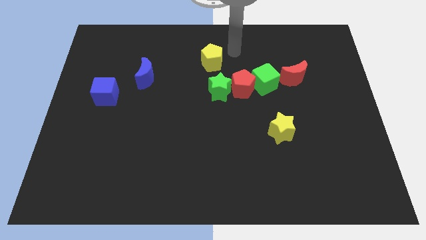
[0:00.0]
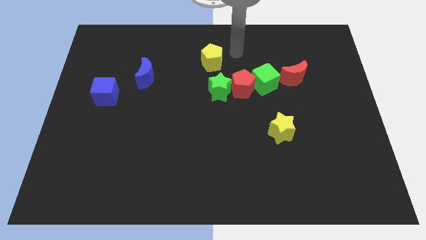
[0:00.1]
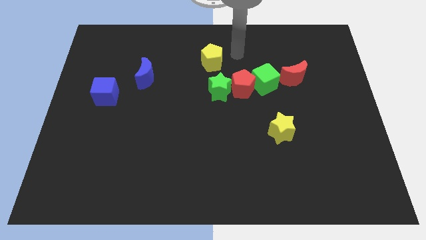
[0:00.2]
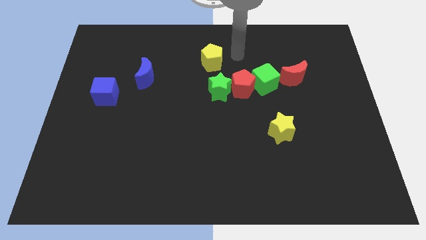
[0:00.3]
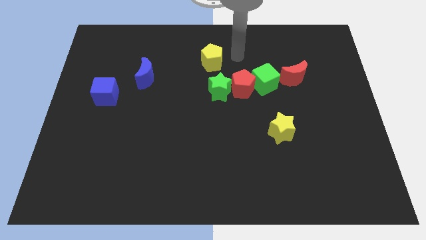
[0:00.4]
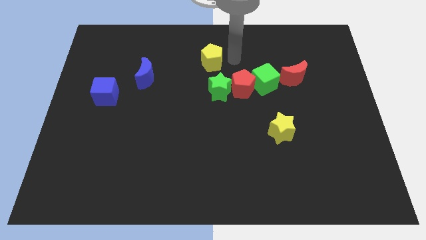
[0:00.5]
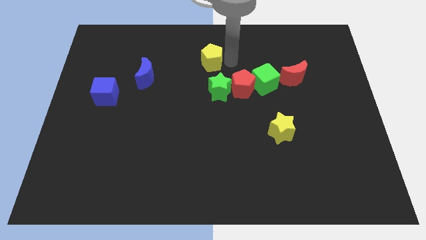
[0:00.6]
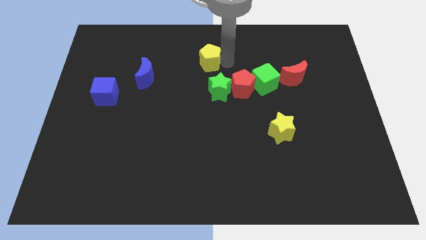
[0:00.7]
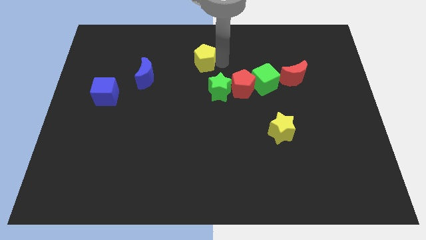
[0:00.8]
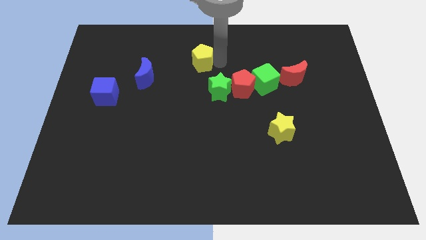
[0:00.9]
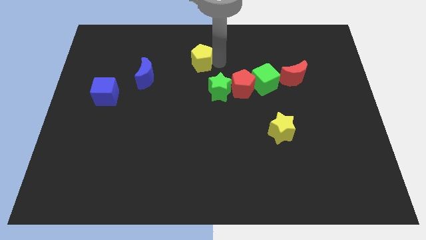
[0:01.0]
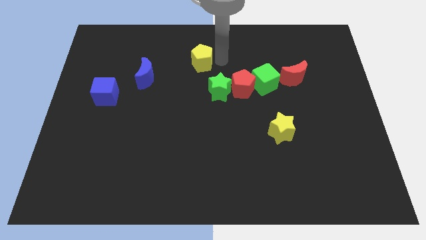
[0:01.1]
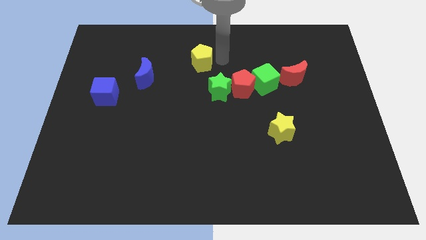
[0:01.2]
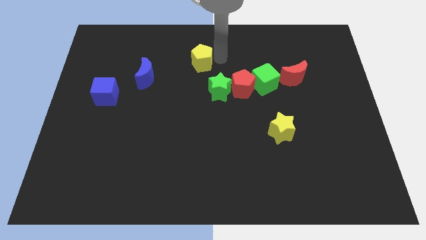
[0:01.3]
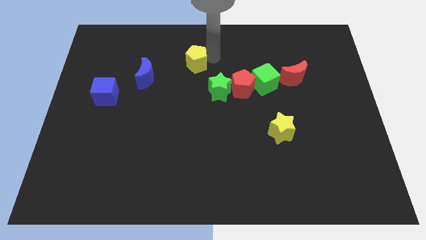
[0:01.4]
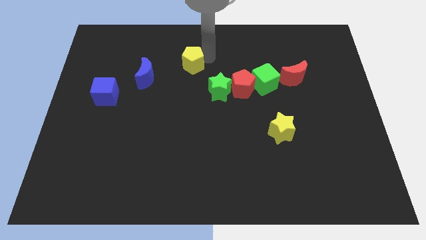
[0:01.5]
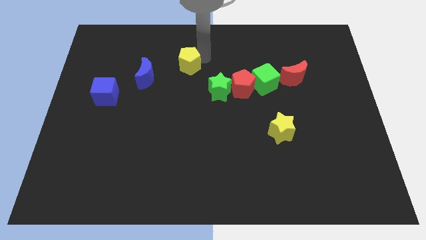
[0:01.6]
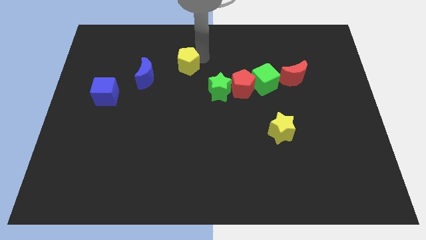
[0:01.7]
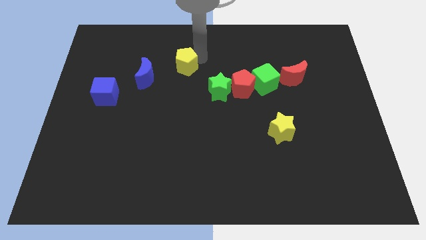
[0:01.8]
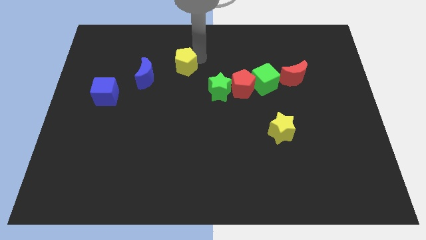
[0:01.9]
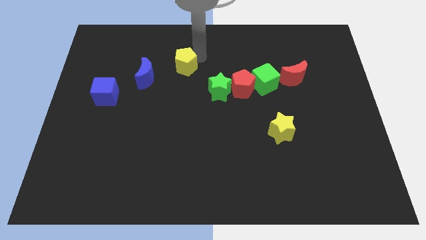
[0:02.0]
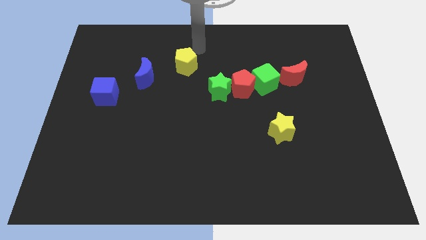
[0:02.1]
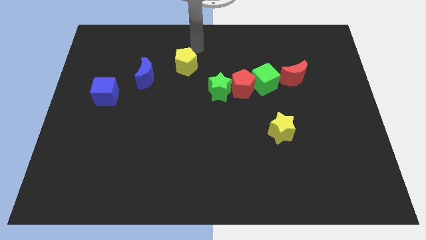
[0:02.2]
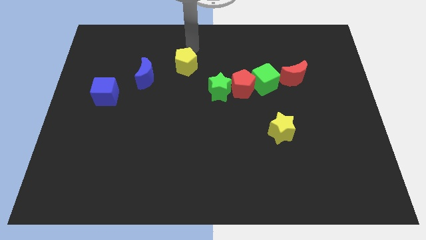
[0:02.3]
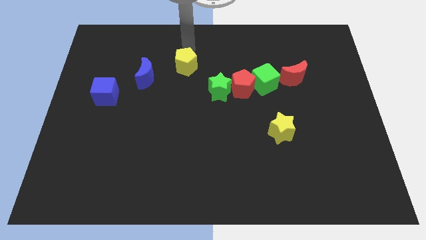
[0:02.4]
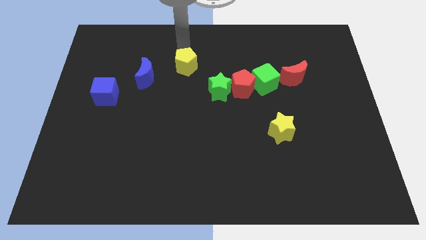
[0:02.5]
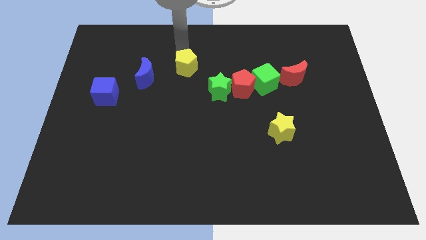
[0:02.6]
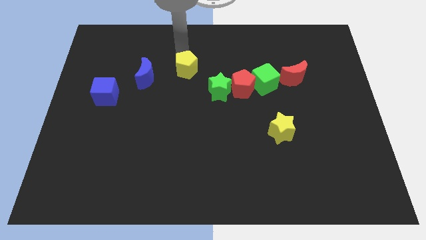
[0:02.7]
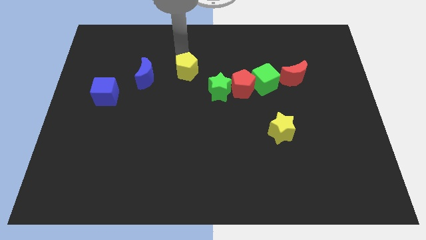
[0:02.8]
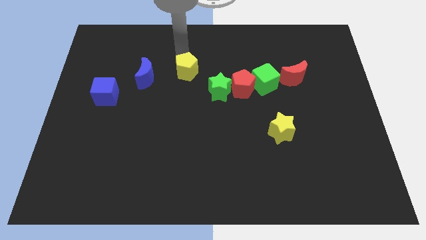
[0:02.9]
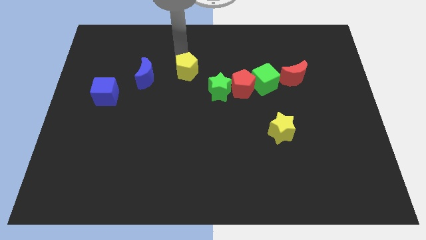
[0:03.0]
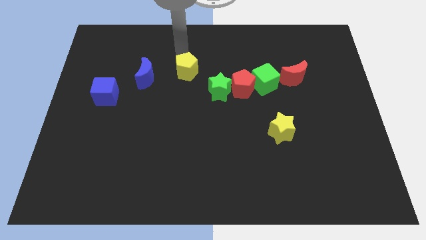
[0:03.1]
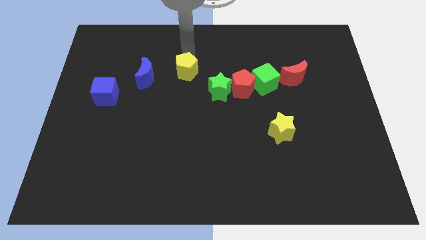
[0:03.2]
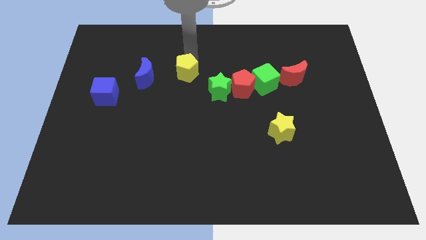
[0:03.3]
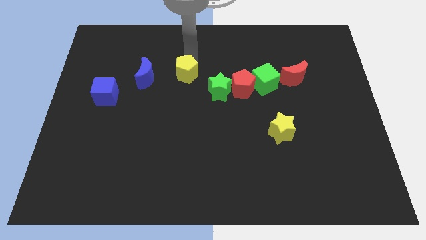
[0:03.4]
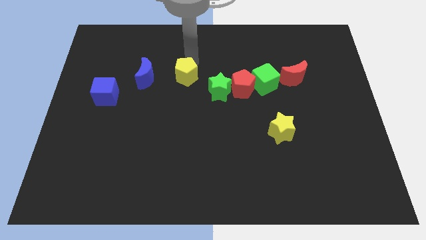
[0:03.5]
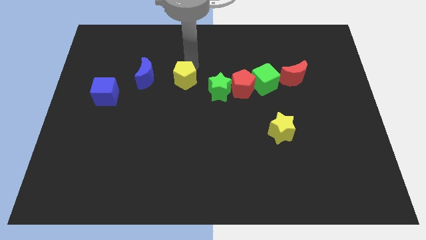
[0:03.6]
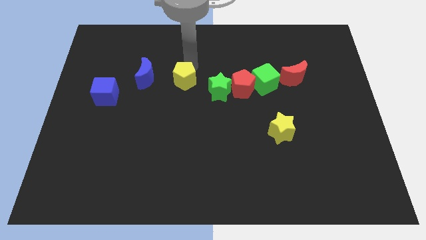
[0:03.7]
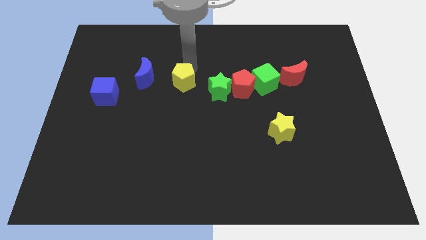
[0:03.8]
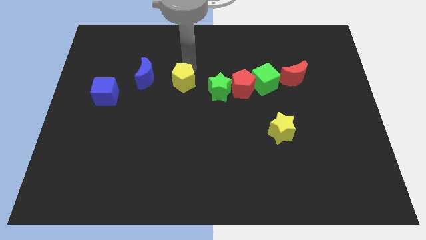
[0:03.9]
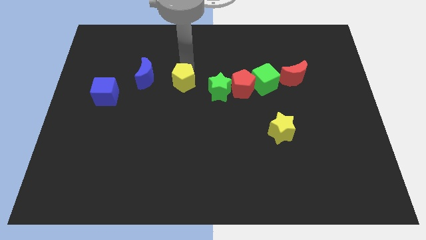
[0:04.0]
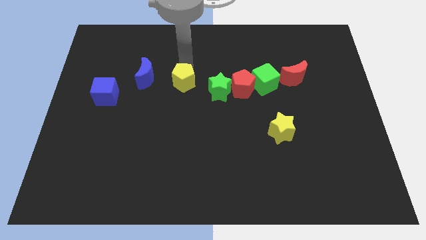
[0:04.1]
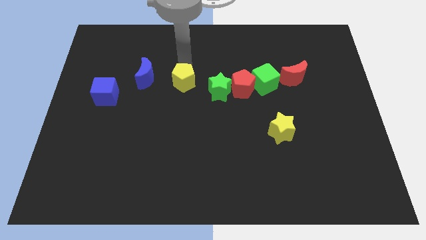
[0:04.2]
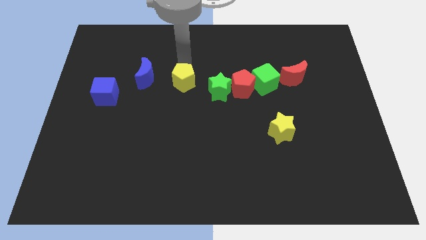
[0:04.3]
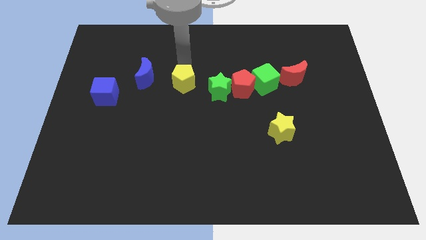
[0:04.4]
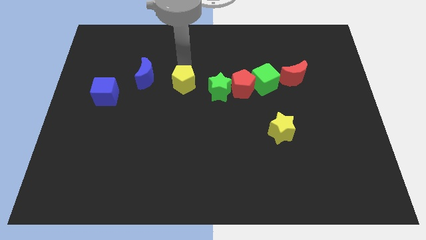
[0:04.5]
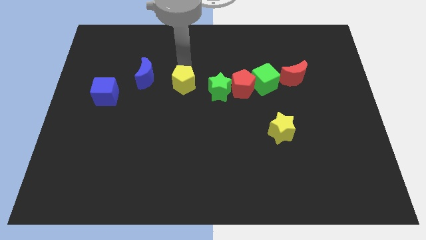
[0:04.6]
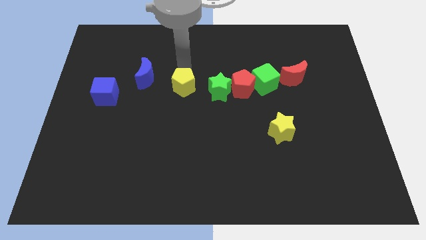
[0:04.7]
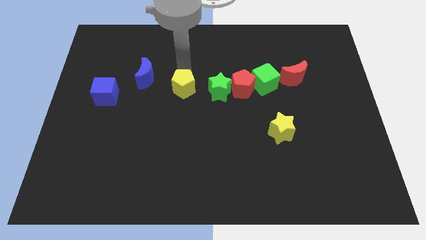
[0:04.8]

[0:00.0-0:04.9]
place the yellow pentagon in between the green star and the blue crescent

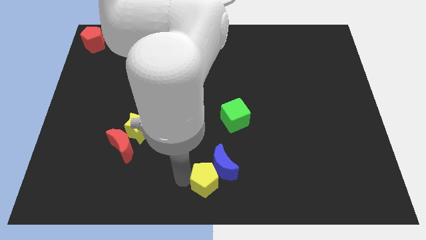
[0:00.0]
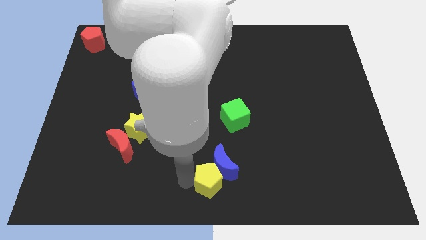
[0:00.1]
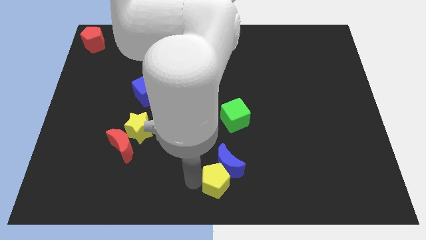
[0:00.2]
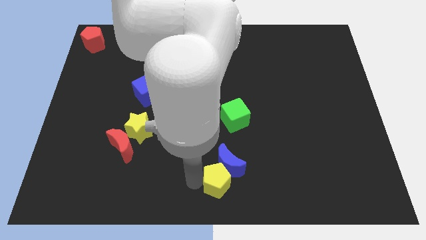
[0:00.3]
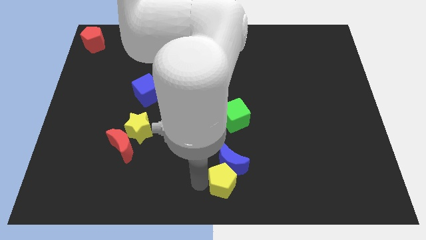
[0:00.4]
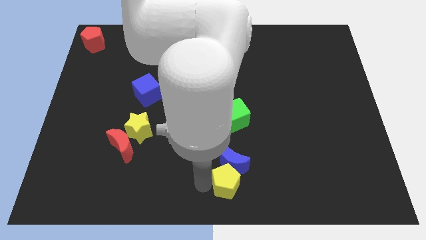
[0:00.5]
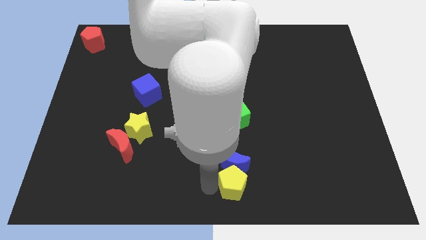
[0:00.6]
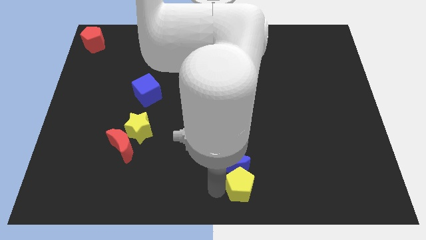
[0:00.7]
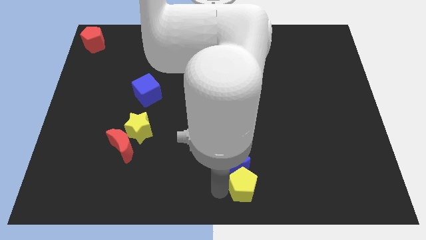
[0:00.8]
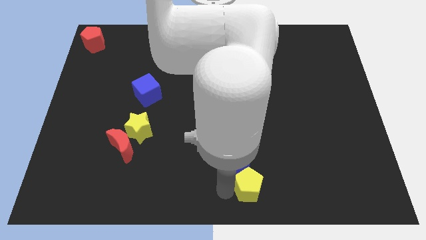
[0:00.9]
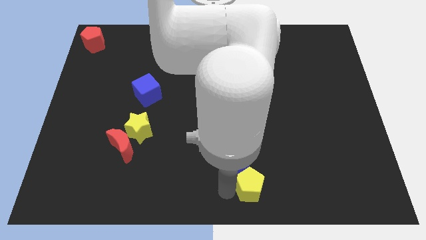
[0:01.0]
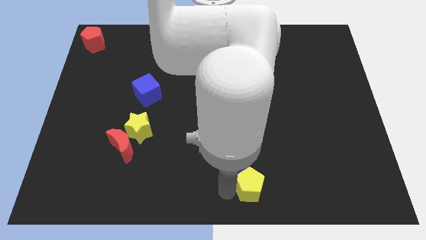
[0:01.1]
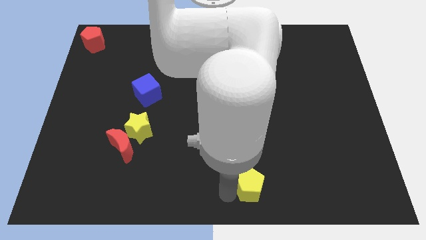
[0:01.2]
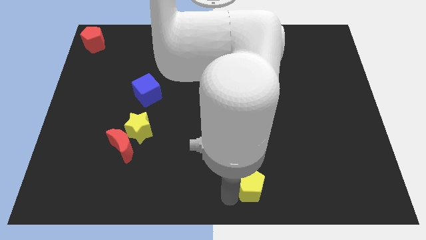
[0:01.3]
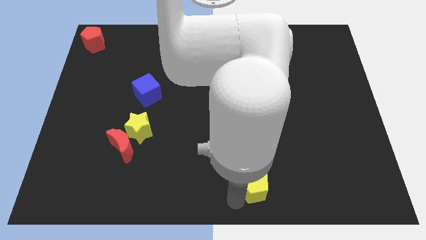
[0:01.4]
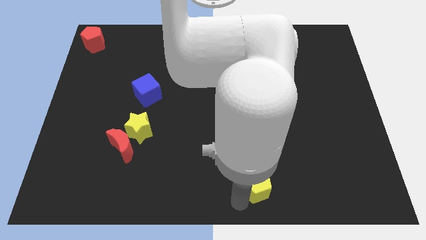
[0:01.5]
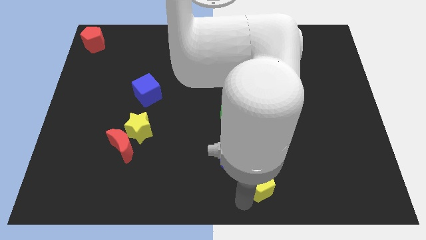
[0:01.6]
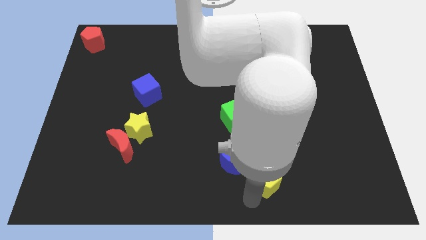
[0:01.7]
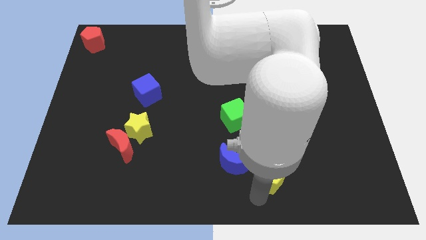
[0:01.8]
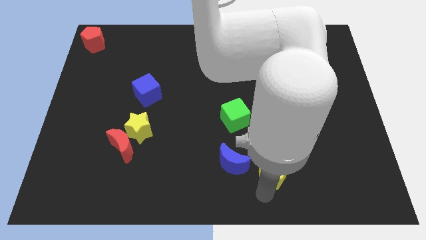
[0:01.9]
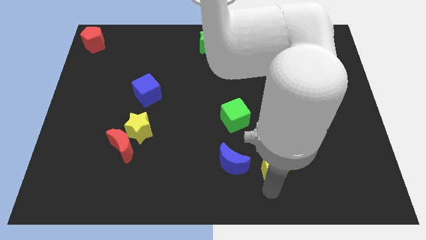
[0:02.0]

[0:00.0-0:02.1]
place yellow pentagon to the right of blue moon

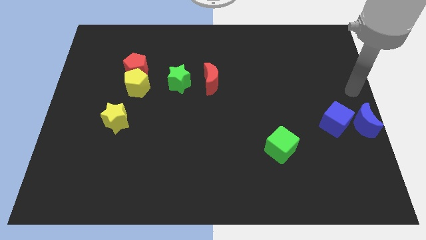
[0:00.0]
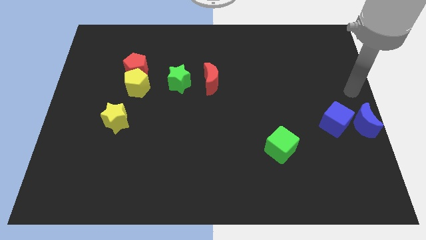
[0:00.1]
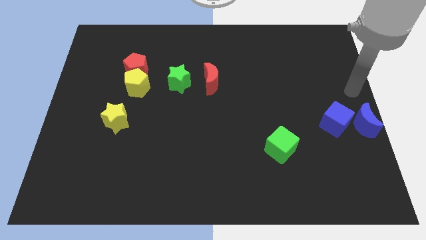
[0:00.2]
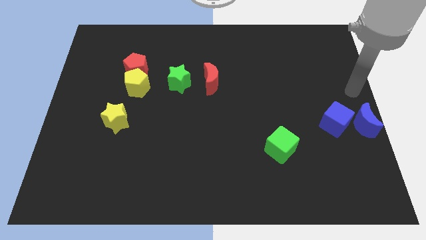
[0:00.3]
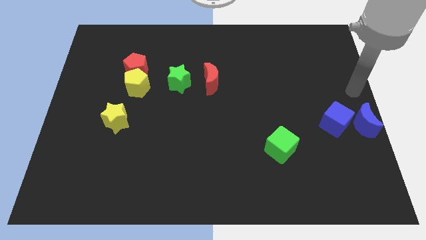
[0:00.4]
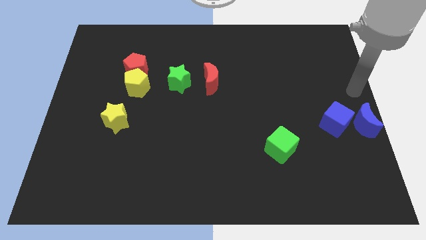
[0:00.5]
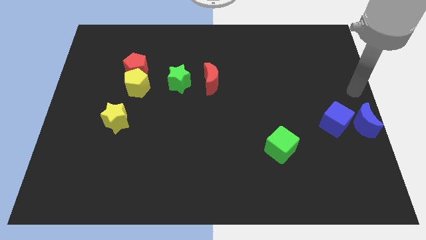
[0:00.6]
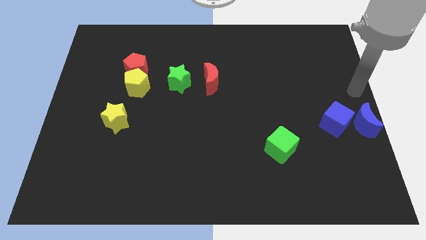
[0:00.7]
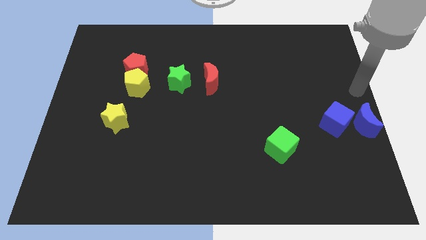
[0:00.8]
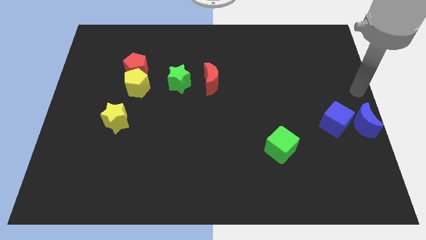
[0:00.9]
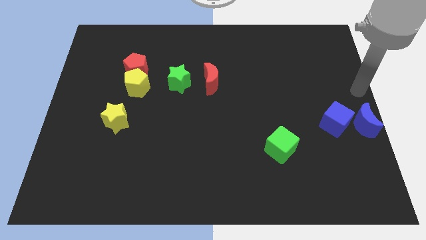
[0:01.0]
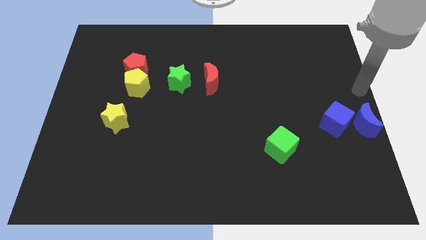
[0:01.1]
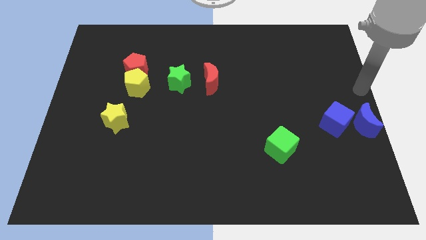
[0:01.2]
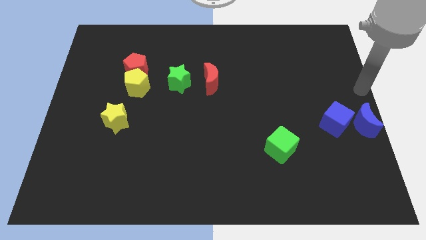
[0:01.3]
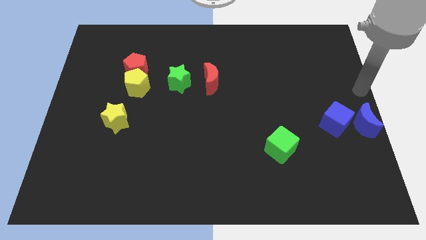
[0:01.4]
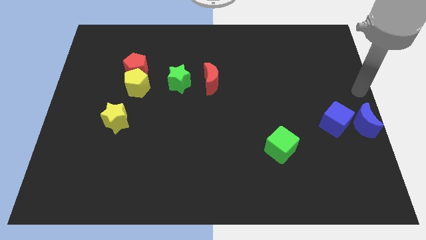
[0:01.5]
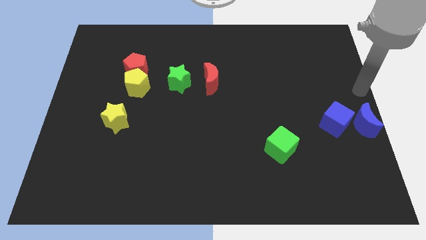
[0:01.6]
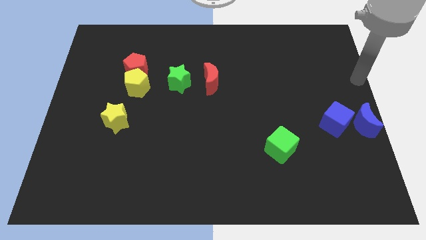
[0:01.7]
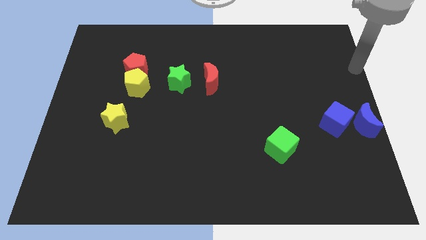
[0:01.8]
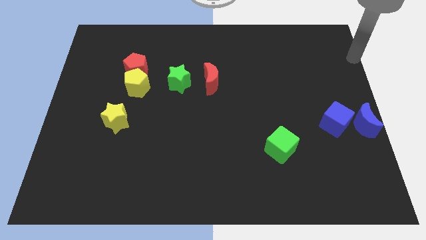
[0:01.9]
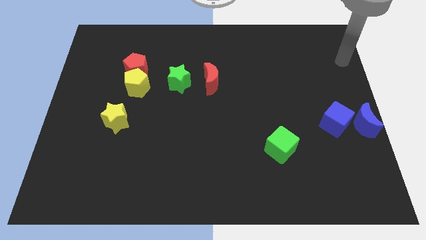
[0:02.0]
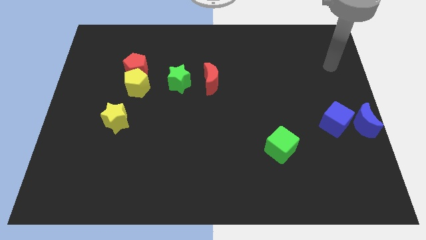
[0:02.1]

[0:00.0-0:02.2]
point the arm above the blue cube
